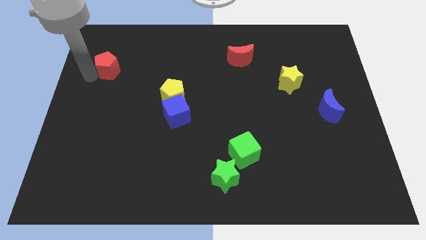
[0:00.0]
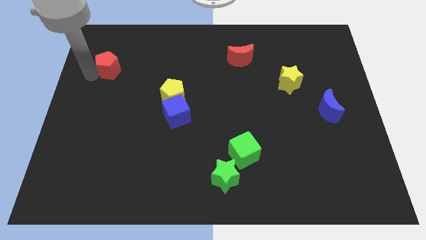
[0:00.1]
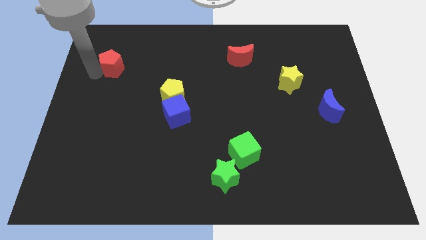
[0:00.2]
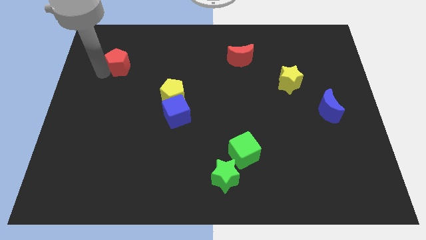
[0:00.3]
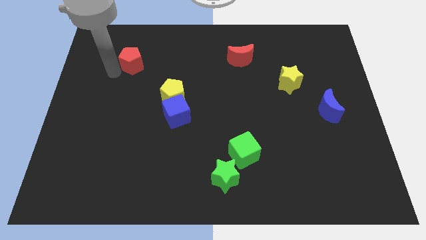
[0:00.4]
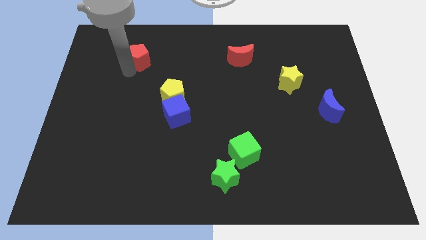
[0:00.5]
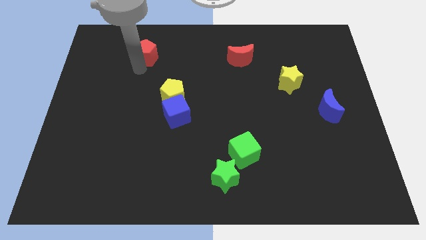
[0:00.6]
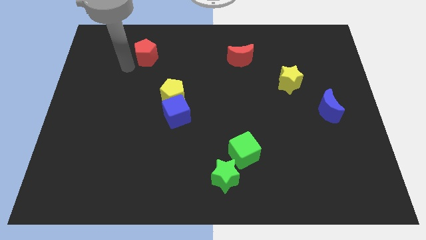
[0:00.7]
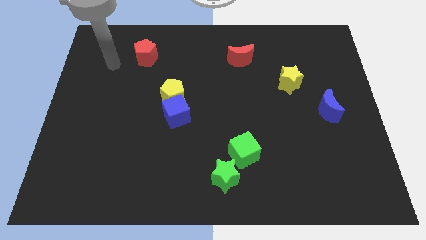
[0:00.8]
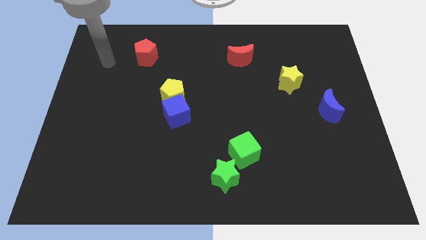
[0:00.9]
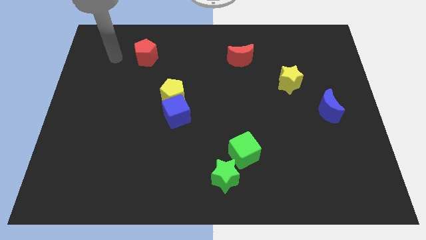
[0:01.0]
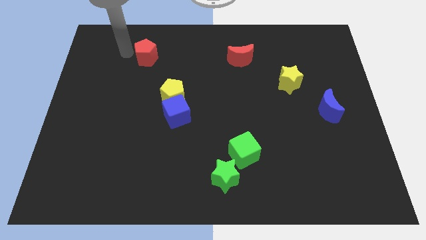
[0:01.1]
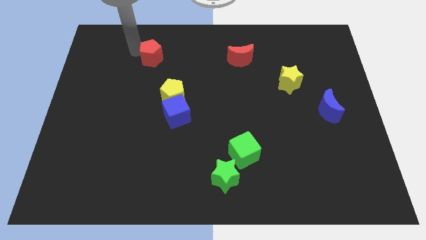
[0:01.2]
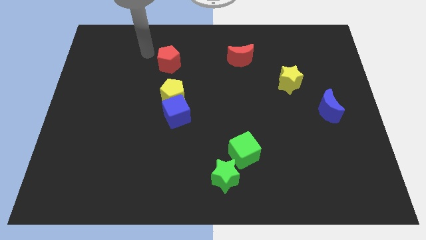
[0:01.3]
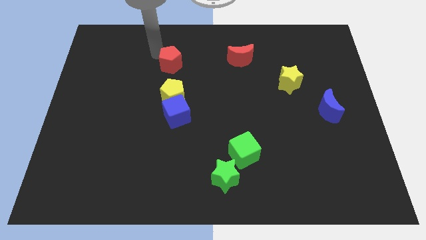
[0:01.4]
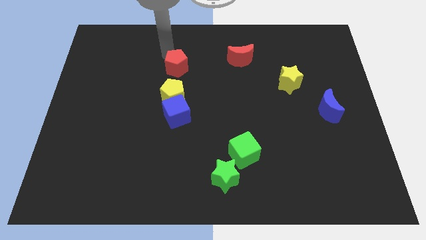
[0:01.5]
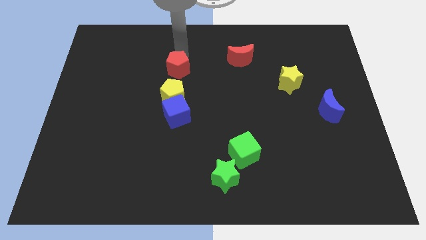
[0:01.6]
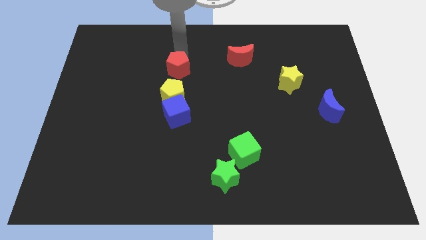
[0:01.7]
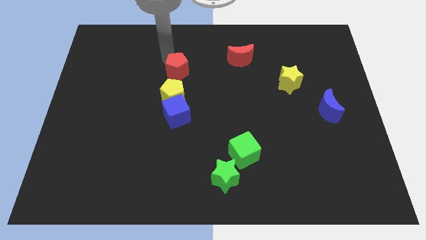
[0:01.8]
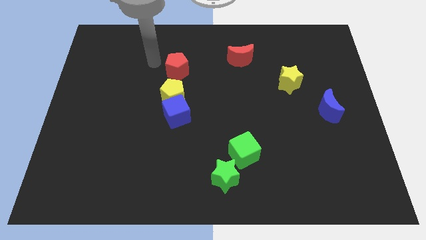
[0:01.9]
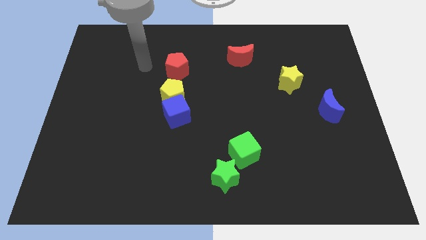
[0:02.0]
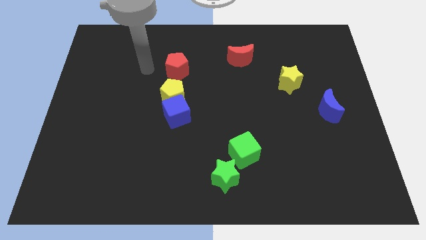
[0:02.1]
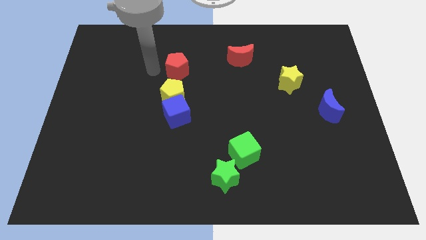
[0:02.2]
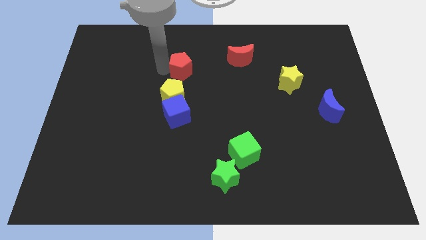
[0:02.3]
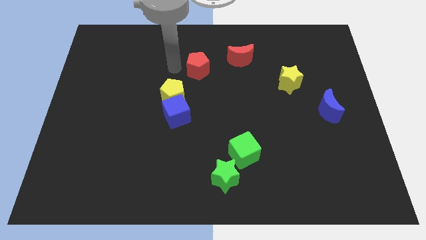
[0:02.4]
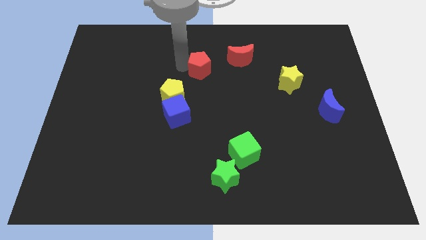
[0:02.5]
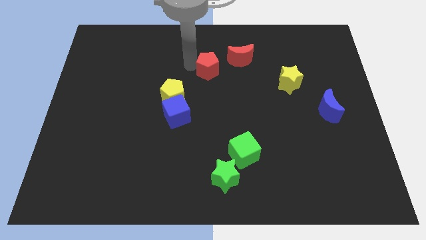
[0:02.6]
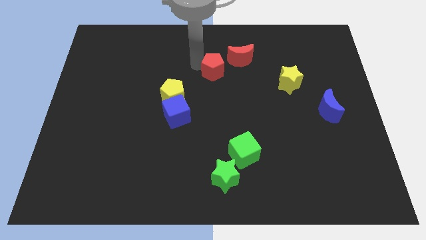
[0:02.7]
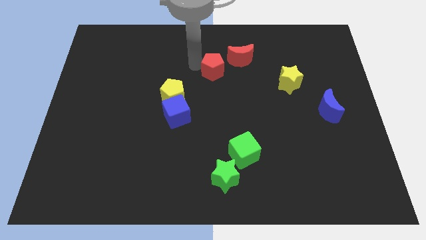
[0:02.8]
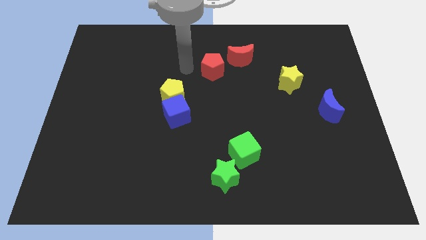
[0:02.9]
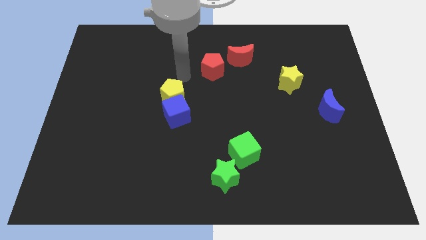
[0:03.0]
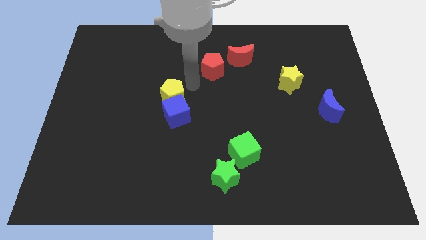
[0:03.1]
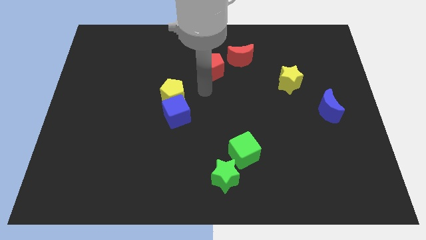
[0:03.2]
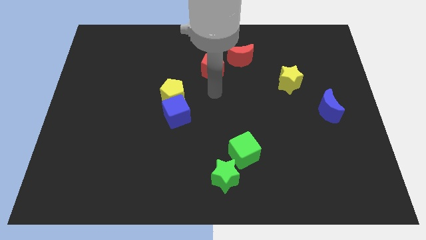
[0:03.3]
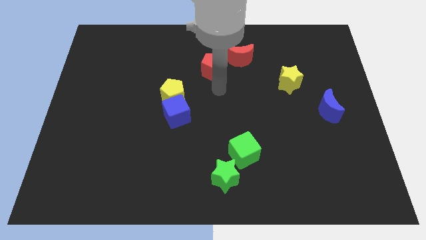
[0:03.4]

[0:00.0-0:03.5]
place the red pentagon above the green star

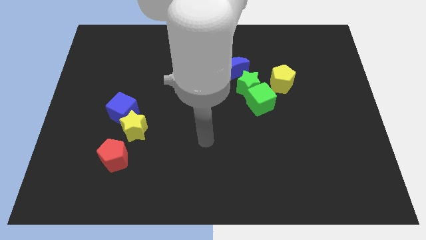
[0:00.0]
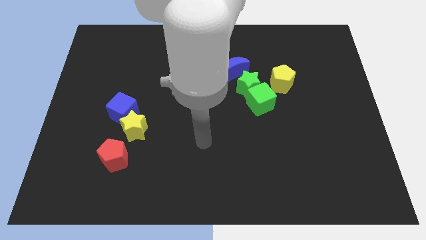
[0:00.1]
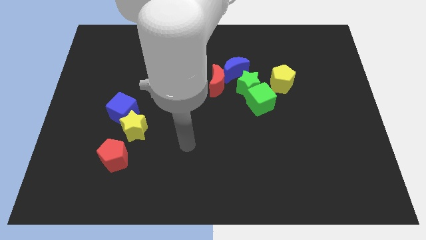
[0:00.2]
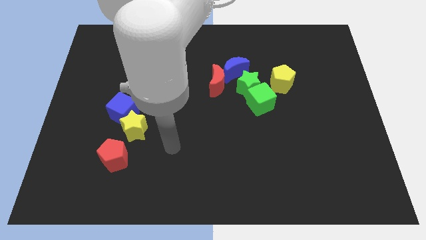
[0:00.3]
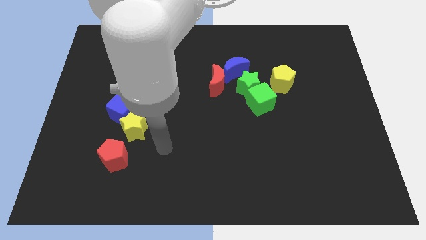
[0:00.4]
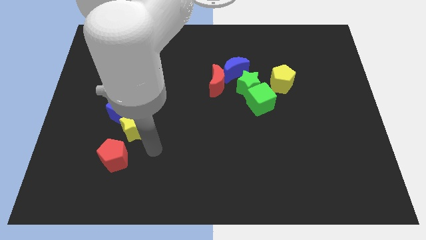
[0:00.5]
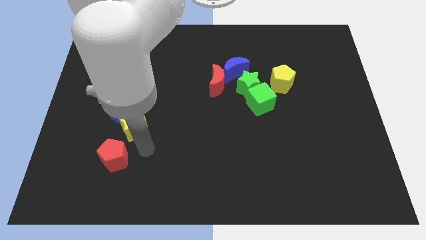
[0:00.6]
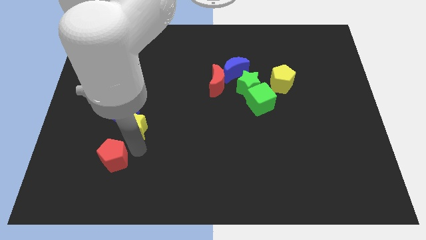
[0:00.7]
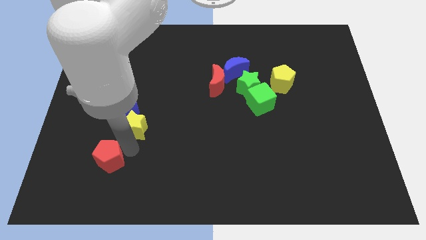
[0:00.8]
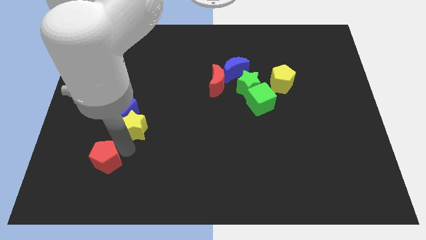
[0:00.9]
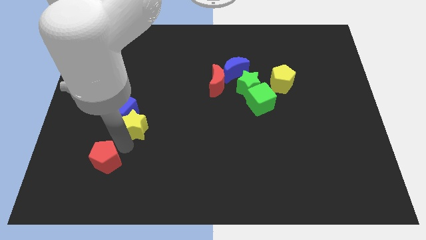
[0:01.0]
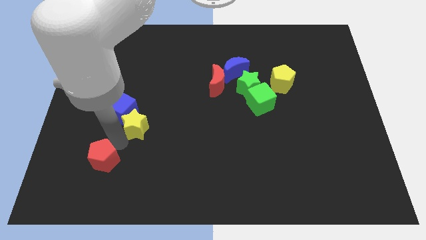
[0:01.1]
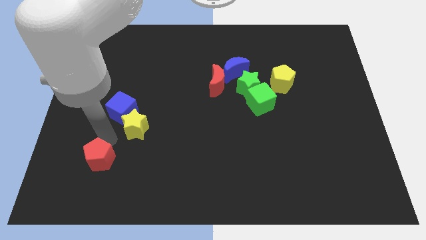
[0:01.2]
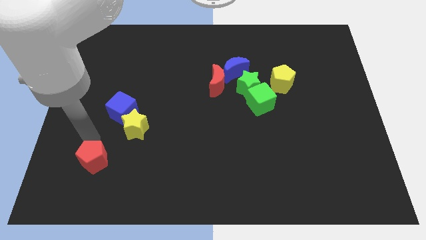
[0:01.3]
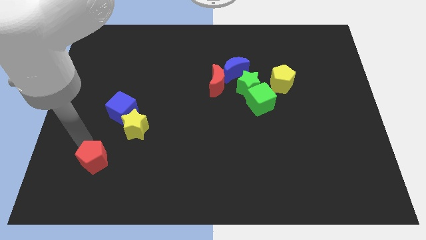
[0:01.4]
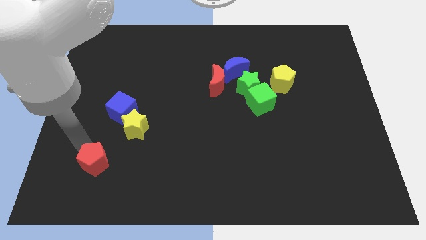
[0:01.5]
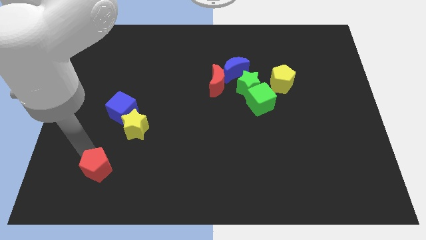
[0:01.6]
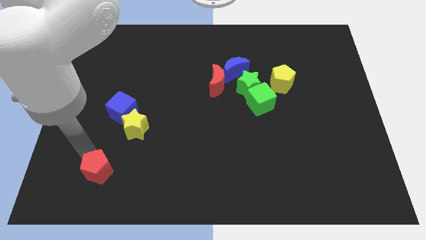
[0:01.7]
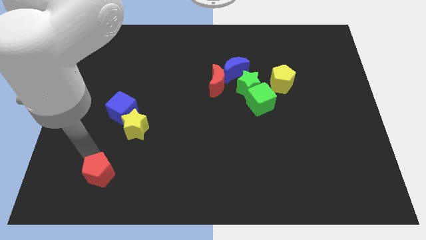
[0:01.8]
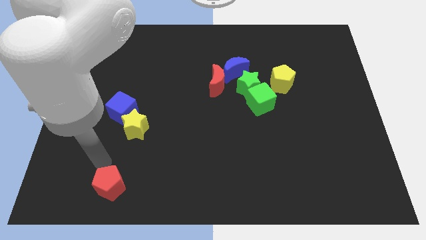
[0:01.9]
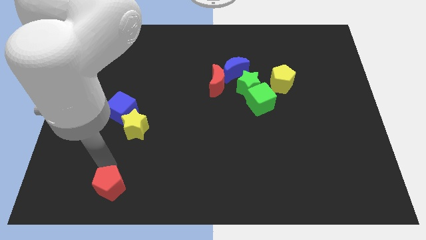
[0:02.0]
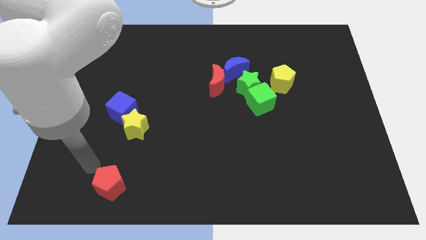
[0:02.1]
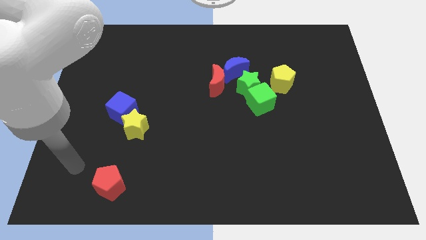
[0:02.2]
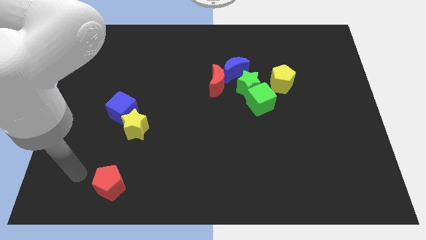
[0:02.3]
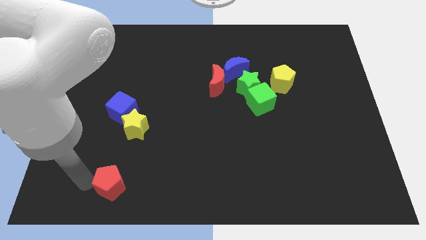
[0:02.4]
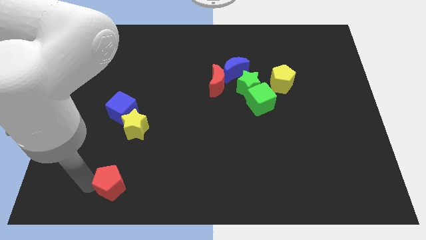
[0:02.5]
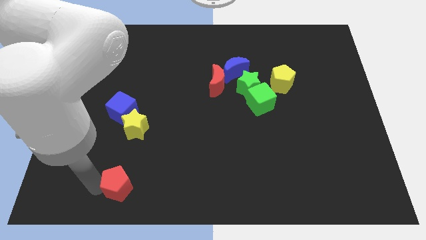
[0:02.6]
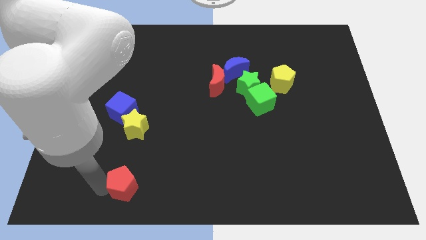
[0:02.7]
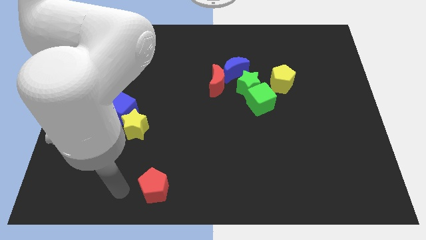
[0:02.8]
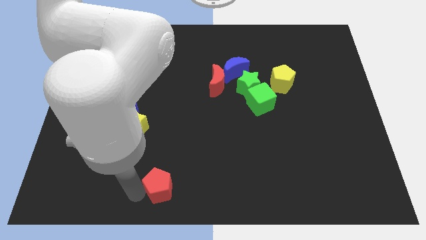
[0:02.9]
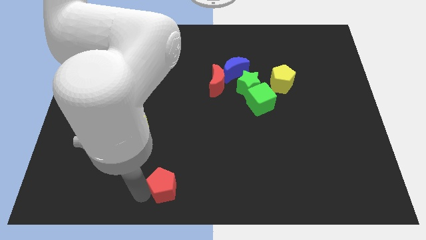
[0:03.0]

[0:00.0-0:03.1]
separate red pentagon from yellow star

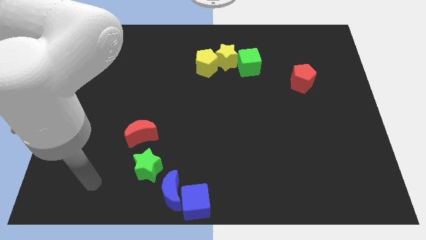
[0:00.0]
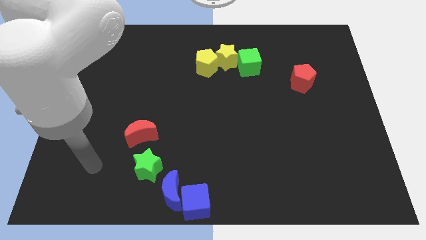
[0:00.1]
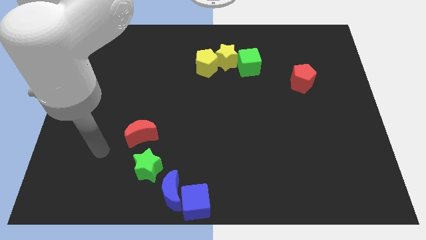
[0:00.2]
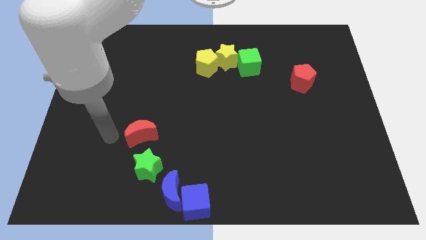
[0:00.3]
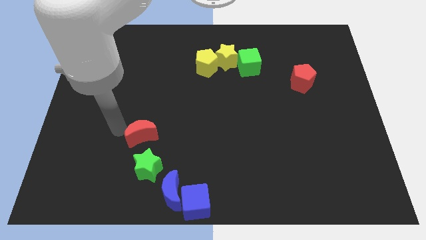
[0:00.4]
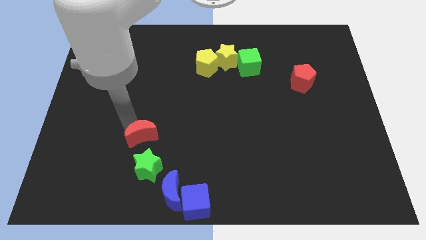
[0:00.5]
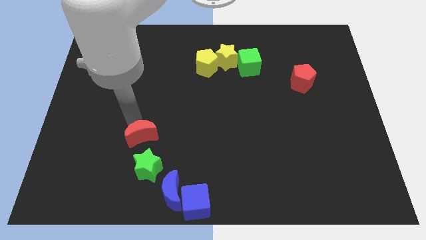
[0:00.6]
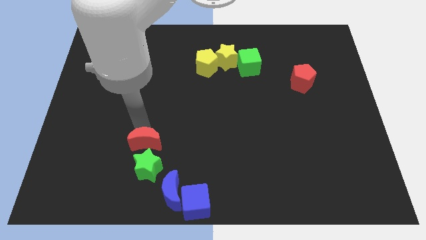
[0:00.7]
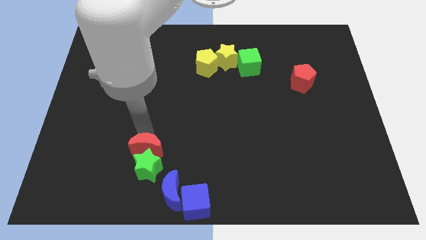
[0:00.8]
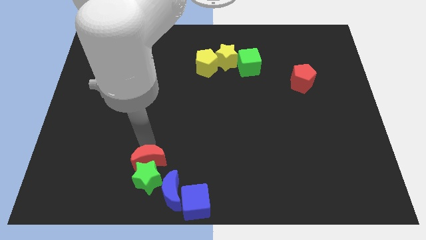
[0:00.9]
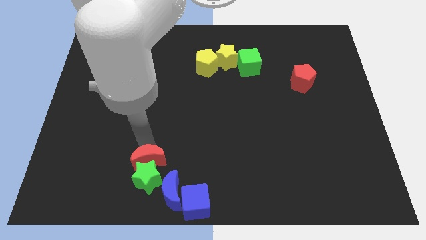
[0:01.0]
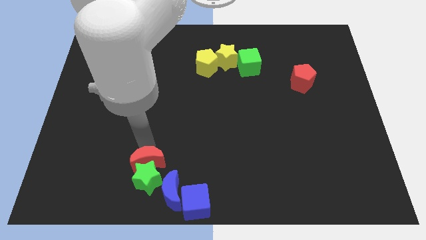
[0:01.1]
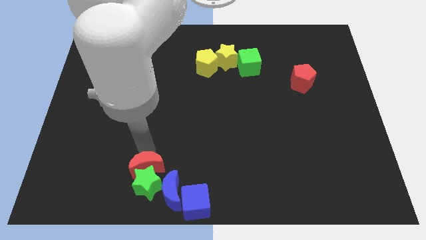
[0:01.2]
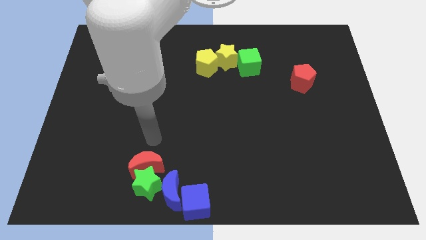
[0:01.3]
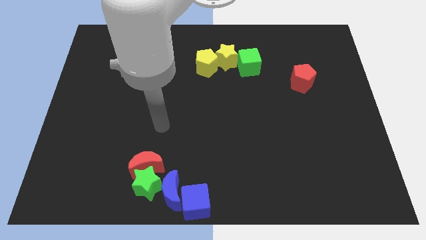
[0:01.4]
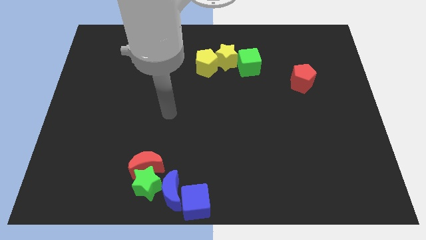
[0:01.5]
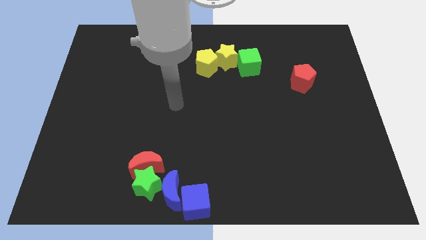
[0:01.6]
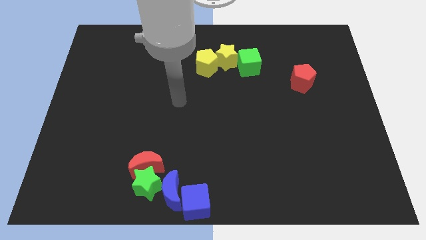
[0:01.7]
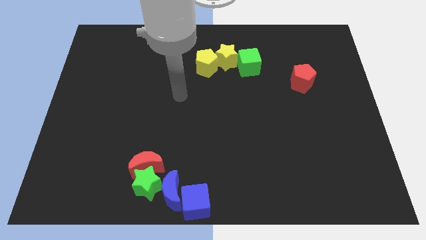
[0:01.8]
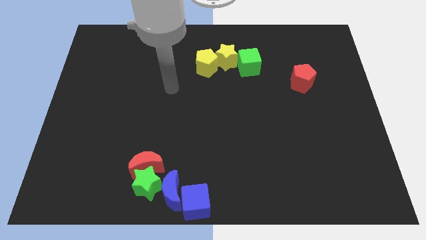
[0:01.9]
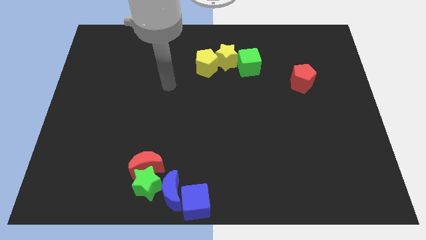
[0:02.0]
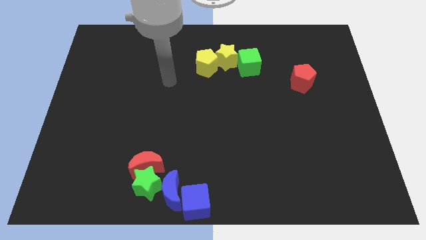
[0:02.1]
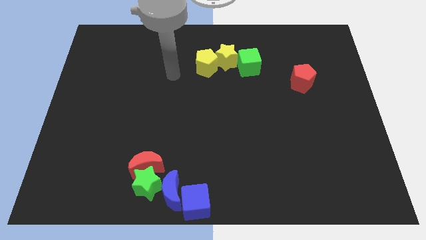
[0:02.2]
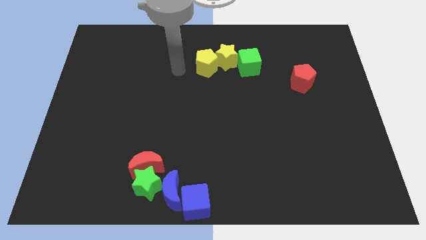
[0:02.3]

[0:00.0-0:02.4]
push the green star with red crescent
